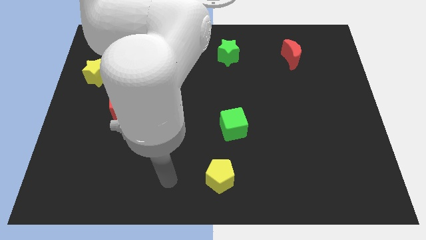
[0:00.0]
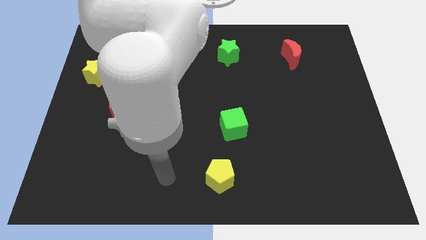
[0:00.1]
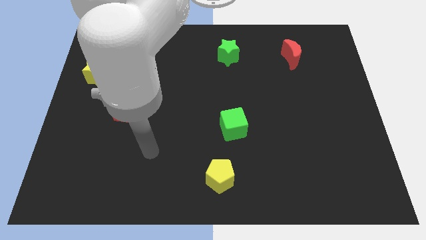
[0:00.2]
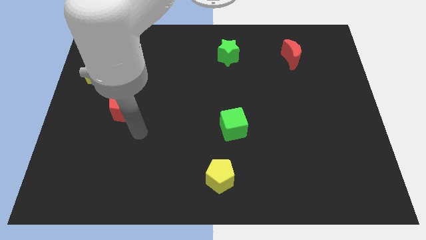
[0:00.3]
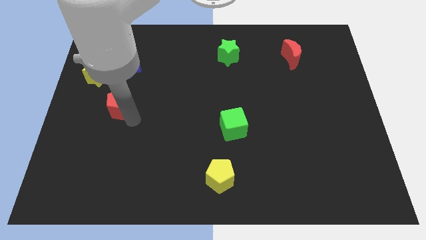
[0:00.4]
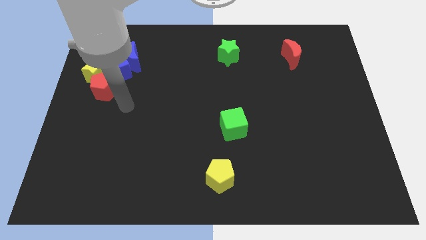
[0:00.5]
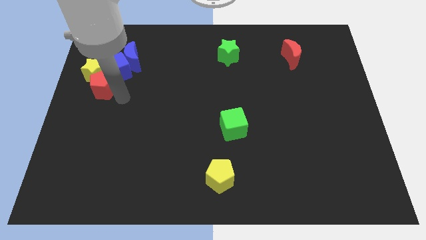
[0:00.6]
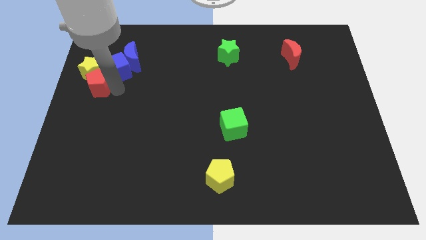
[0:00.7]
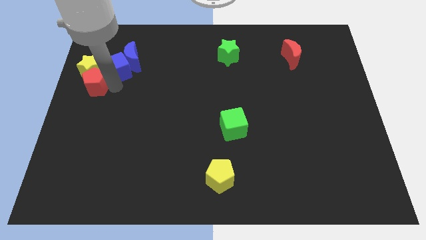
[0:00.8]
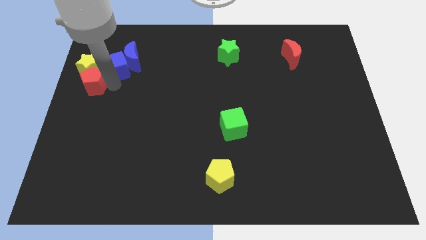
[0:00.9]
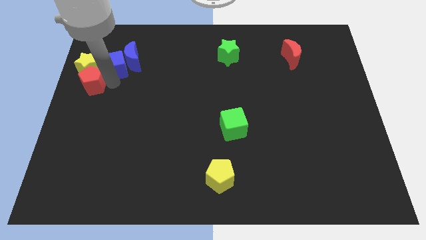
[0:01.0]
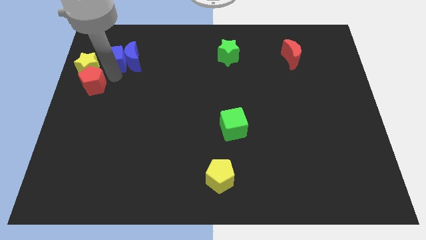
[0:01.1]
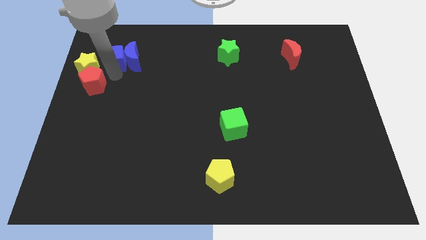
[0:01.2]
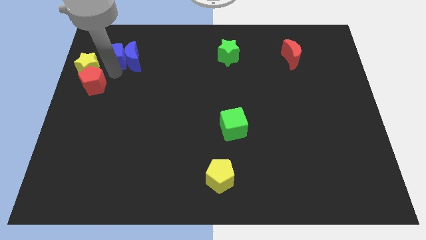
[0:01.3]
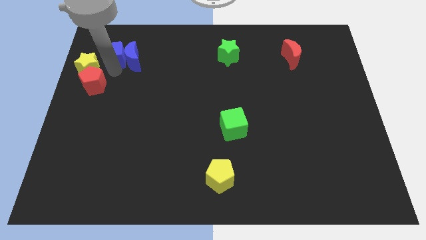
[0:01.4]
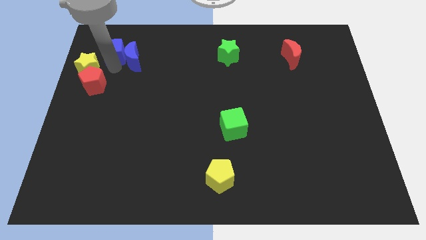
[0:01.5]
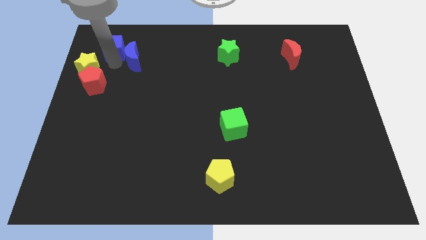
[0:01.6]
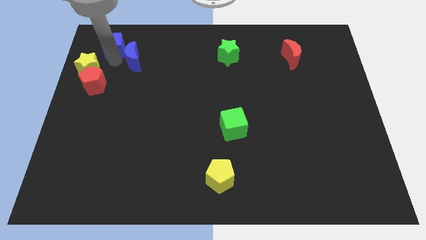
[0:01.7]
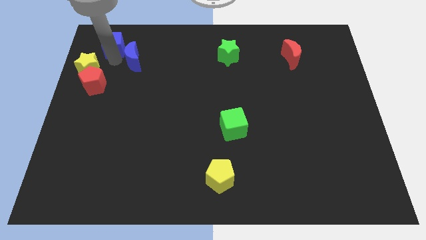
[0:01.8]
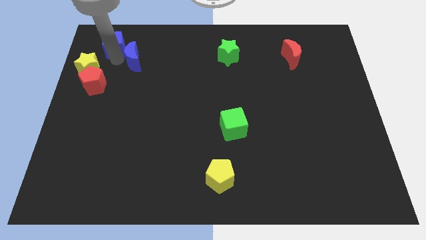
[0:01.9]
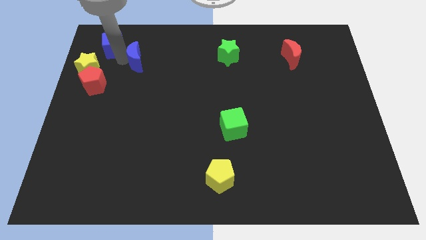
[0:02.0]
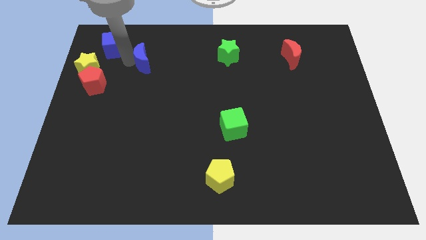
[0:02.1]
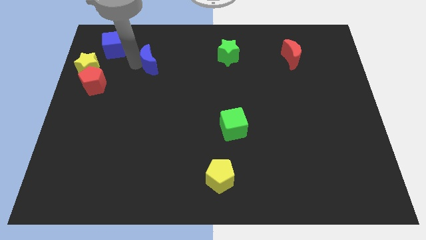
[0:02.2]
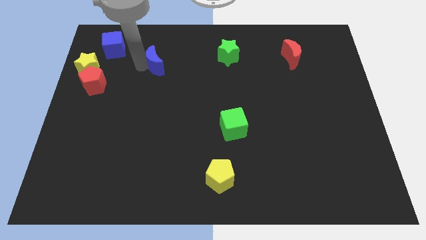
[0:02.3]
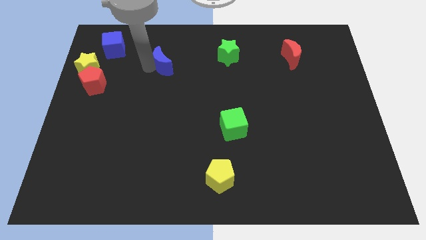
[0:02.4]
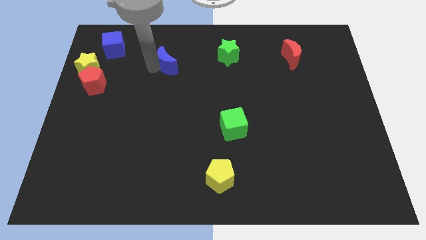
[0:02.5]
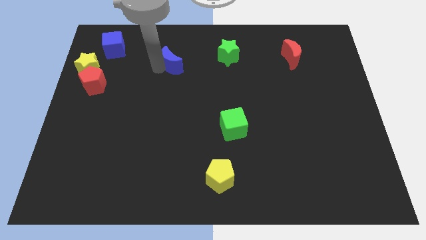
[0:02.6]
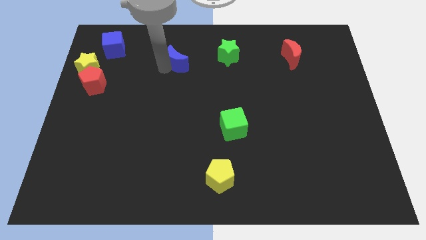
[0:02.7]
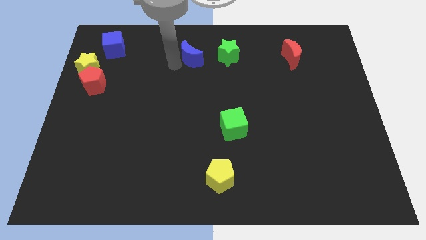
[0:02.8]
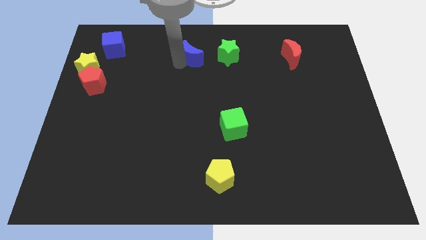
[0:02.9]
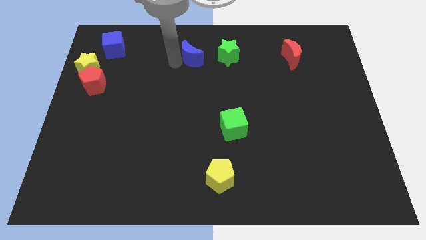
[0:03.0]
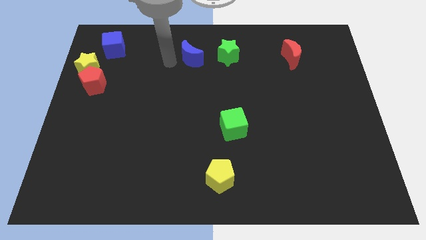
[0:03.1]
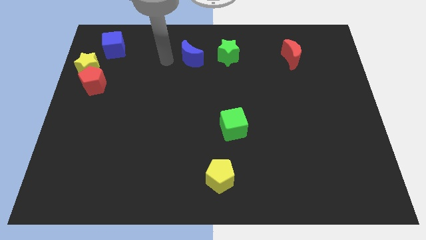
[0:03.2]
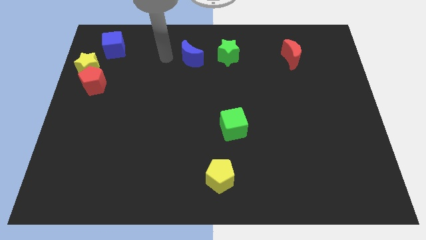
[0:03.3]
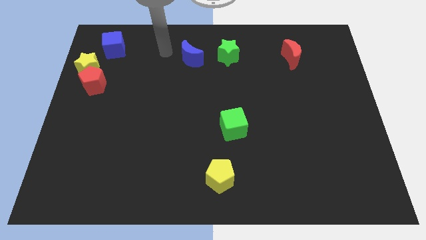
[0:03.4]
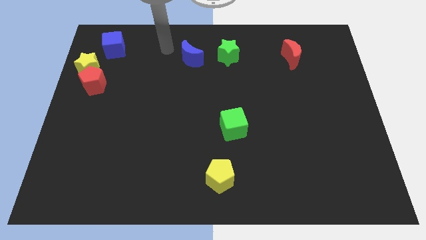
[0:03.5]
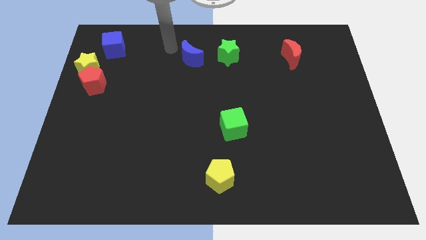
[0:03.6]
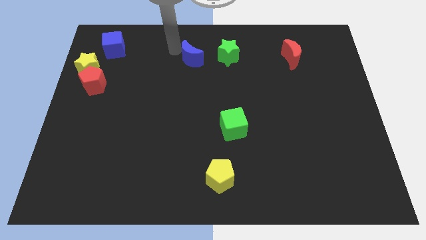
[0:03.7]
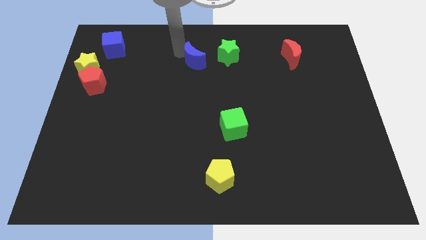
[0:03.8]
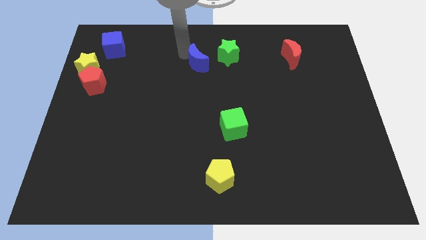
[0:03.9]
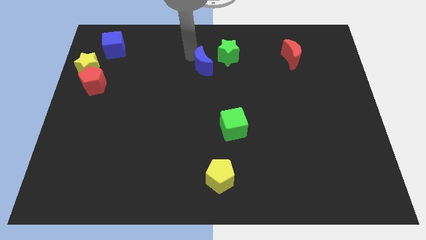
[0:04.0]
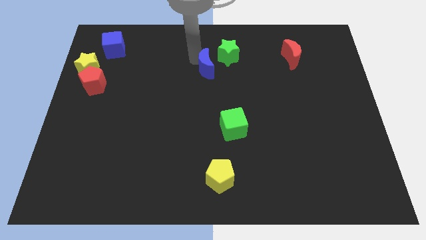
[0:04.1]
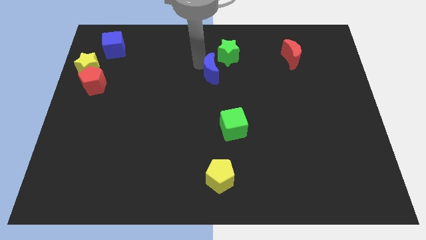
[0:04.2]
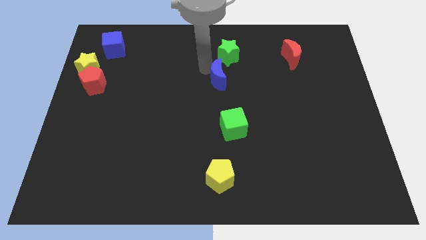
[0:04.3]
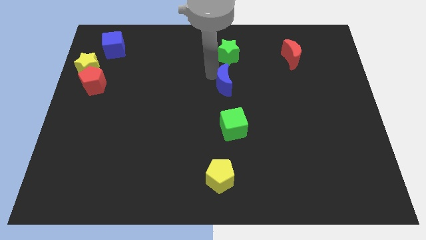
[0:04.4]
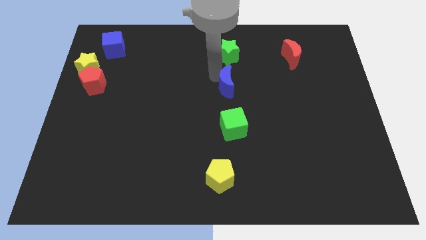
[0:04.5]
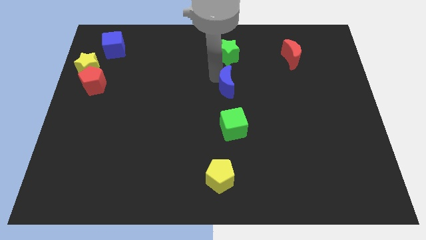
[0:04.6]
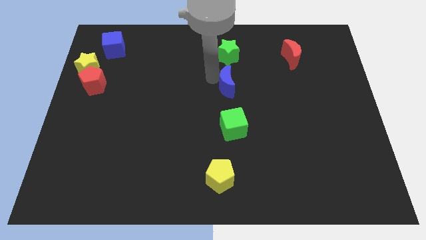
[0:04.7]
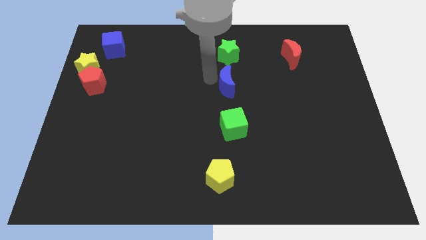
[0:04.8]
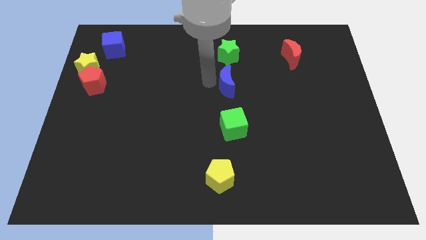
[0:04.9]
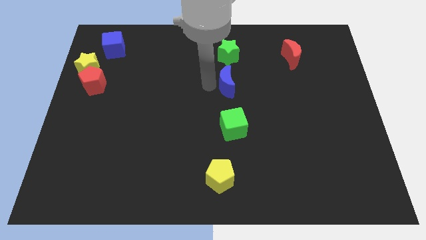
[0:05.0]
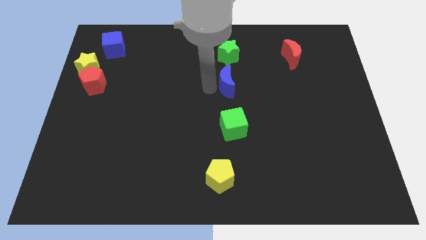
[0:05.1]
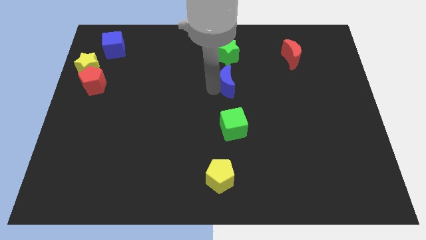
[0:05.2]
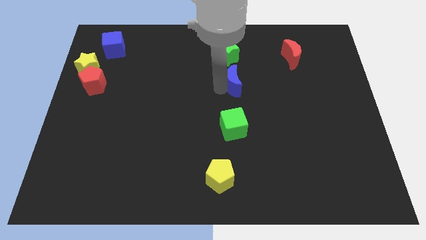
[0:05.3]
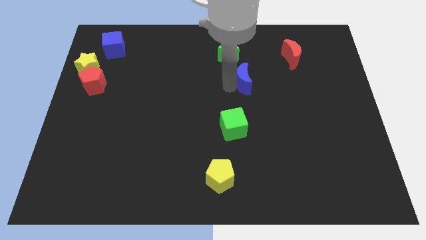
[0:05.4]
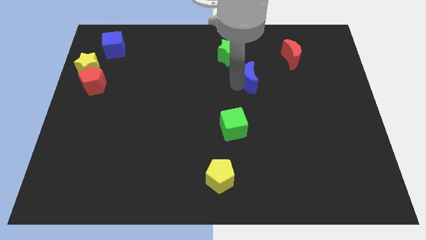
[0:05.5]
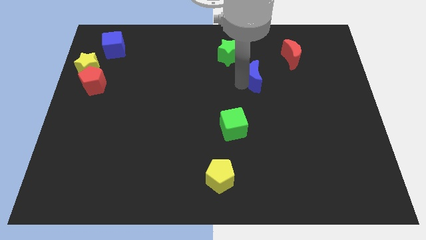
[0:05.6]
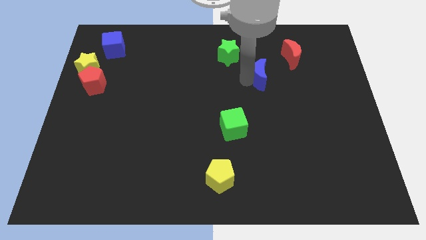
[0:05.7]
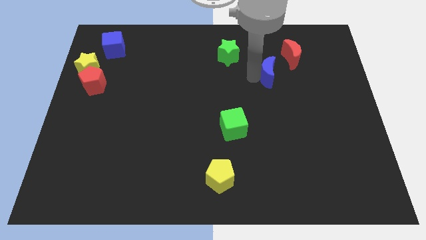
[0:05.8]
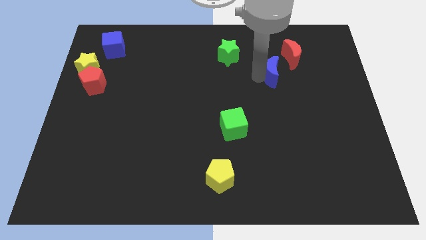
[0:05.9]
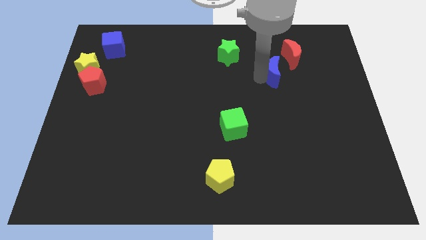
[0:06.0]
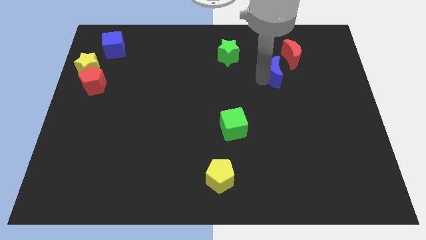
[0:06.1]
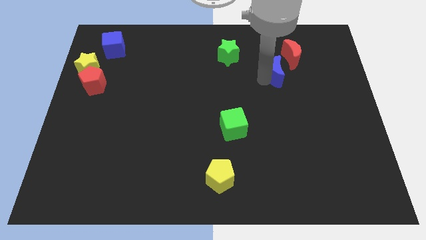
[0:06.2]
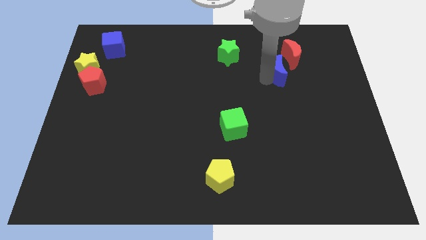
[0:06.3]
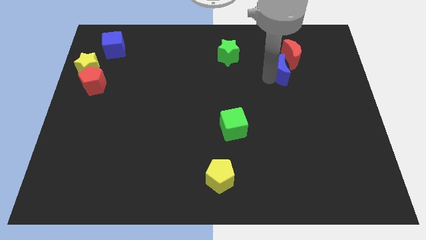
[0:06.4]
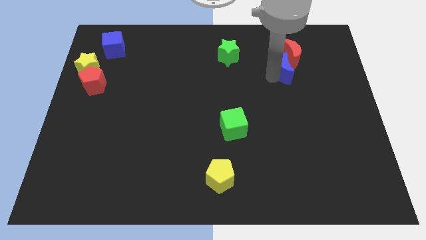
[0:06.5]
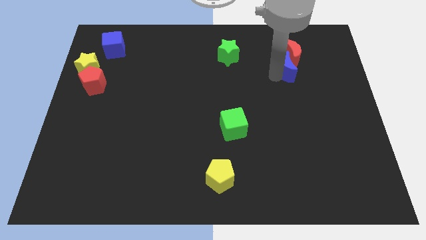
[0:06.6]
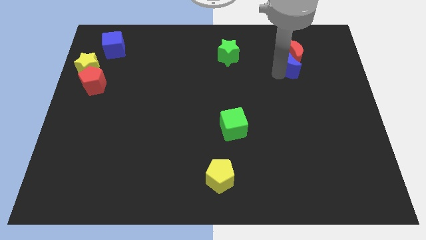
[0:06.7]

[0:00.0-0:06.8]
slide the blue moon next to the red moon

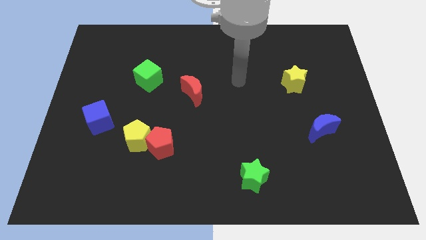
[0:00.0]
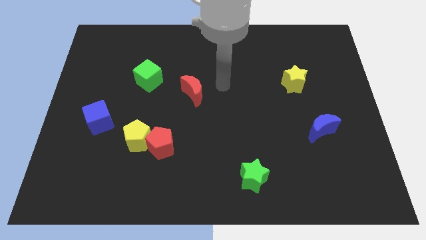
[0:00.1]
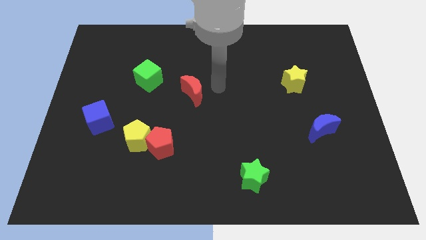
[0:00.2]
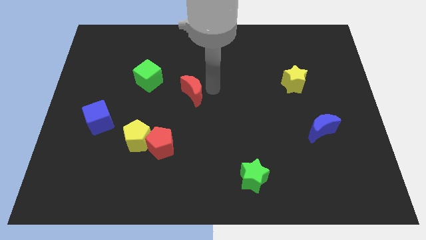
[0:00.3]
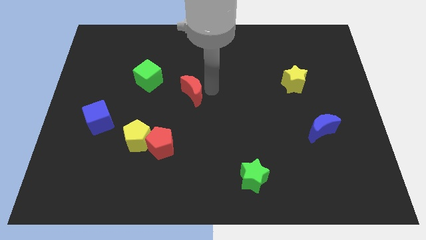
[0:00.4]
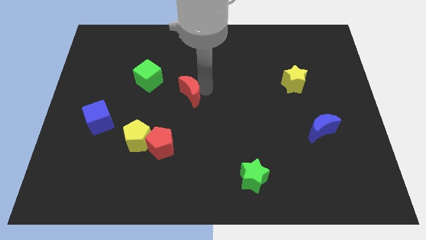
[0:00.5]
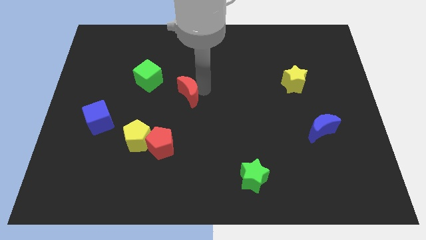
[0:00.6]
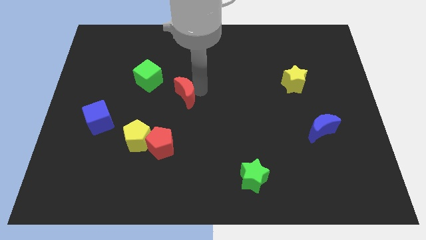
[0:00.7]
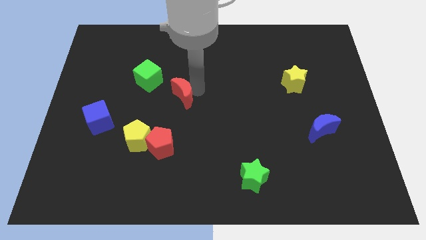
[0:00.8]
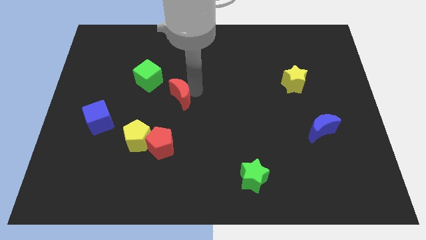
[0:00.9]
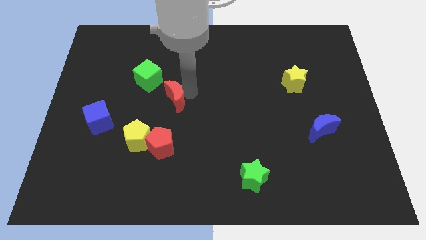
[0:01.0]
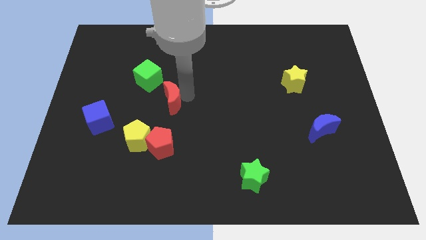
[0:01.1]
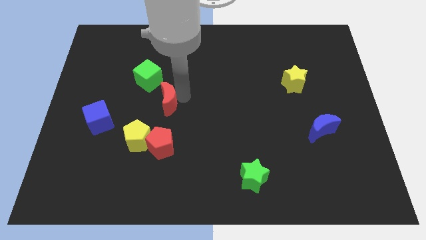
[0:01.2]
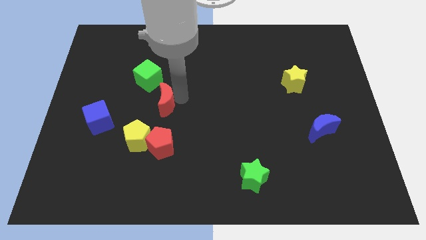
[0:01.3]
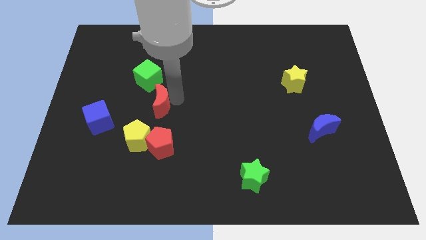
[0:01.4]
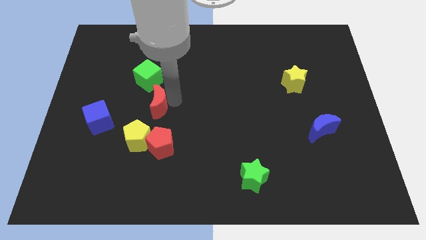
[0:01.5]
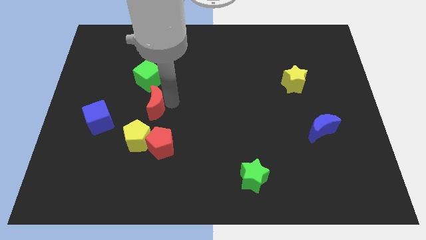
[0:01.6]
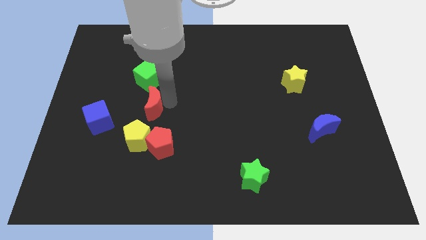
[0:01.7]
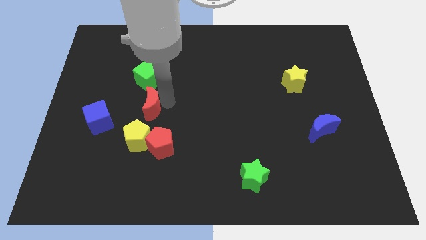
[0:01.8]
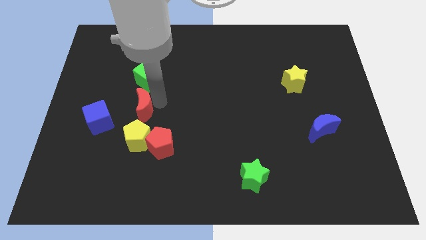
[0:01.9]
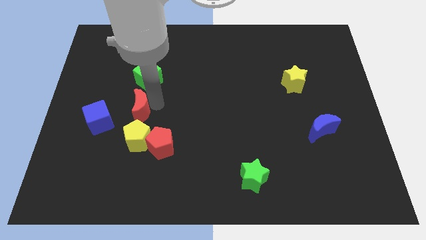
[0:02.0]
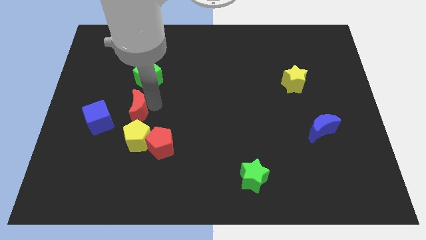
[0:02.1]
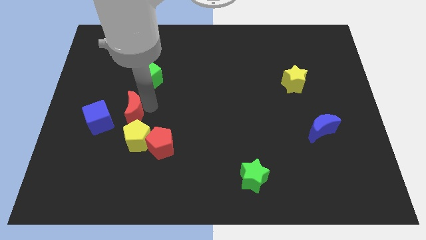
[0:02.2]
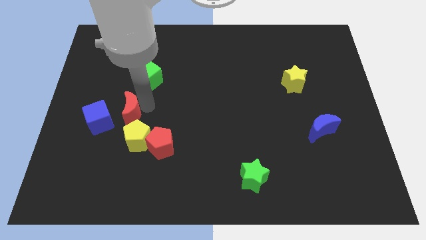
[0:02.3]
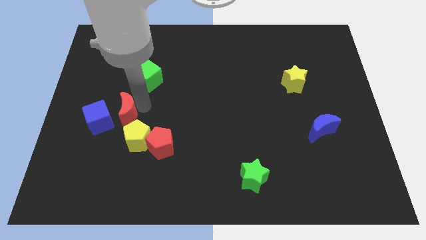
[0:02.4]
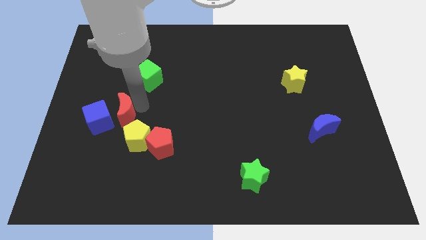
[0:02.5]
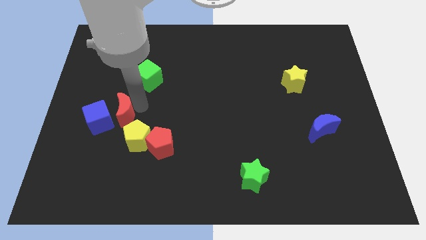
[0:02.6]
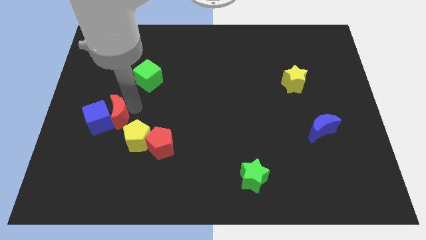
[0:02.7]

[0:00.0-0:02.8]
push the red moon to the blue cube
